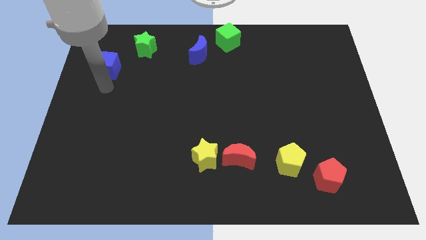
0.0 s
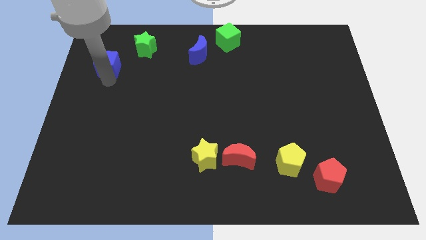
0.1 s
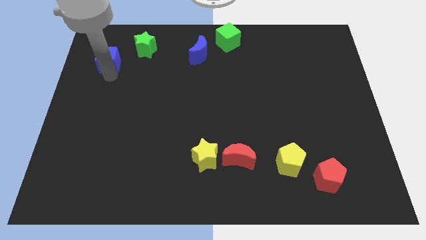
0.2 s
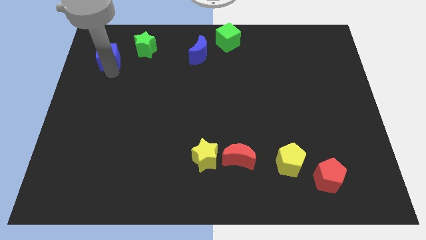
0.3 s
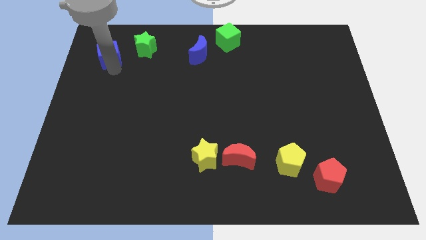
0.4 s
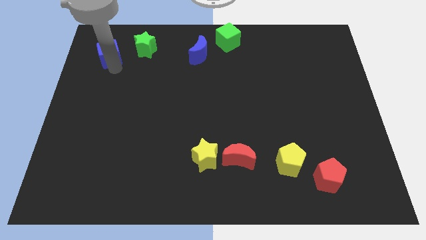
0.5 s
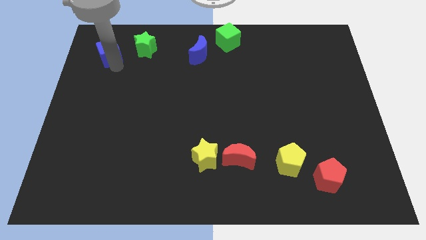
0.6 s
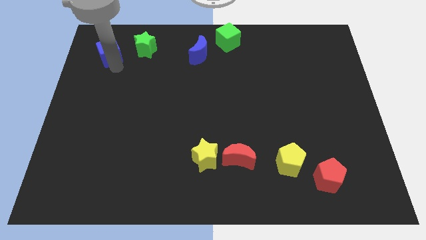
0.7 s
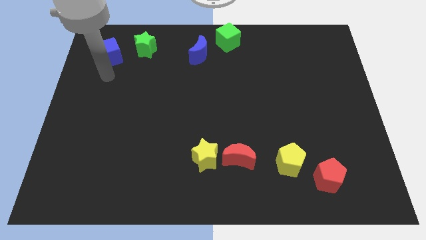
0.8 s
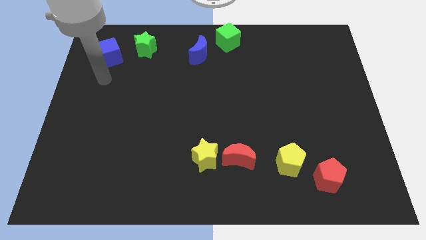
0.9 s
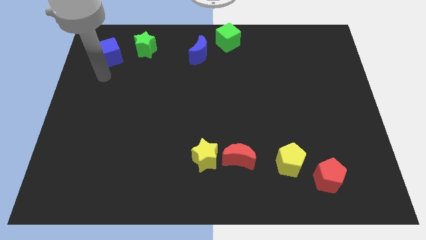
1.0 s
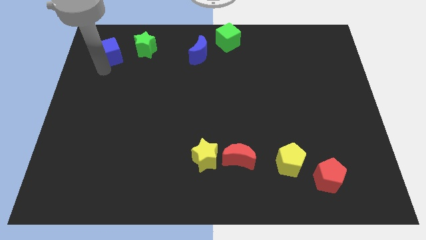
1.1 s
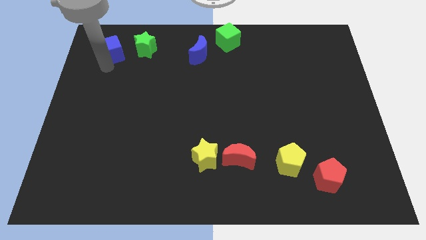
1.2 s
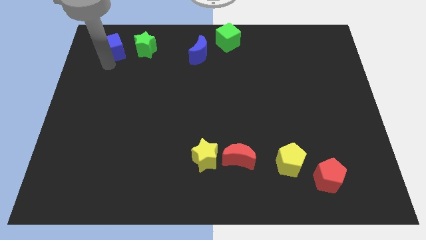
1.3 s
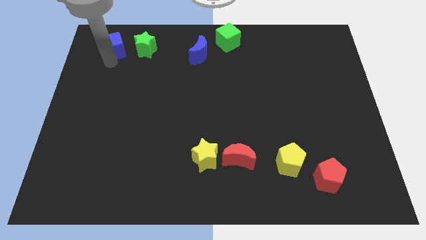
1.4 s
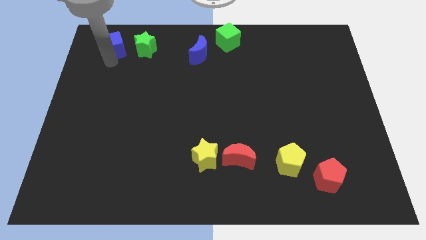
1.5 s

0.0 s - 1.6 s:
move the blue cube to the left side of the green star

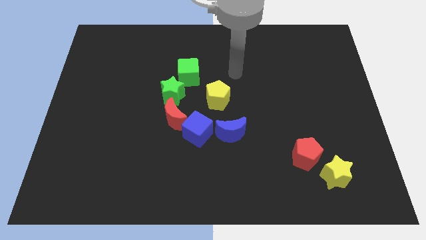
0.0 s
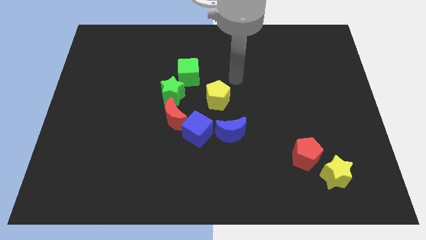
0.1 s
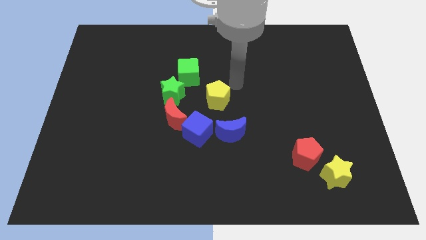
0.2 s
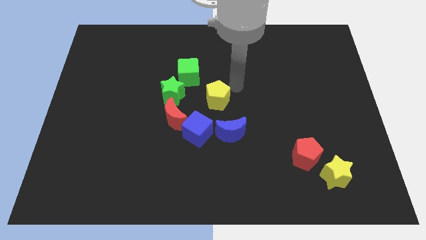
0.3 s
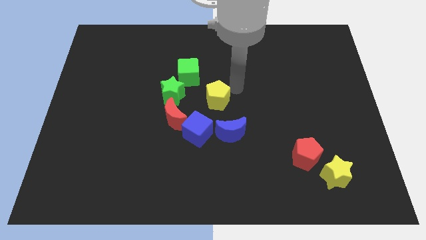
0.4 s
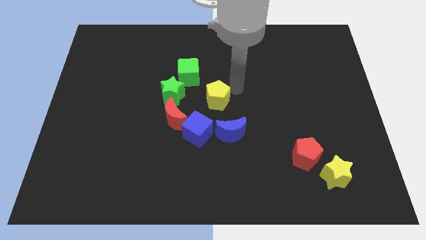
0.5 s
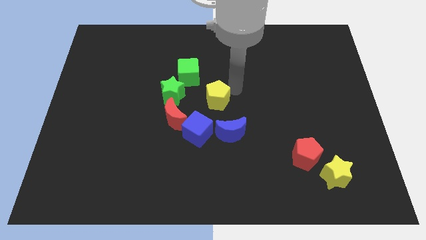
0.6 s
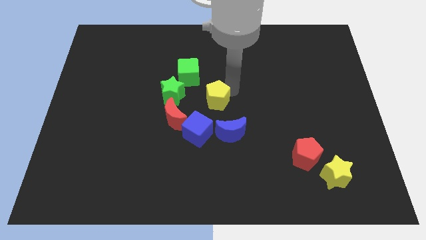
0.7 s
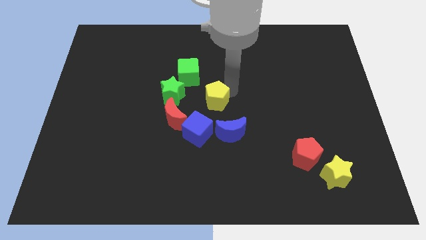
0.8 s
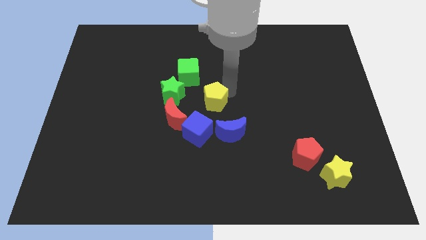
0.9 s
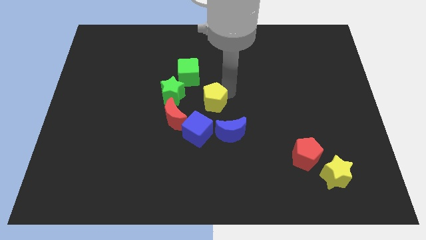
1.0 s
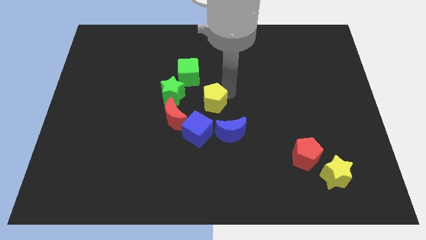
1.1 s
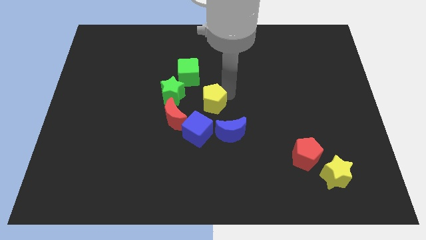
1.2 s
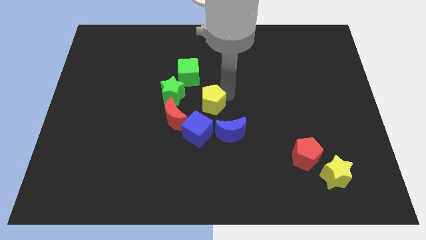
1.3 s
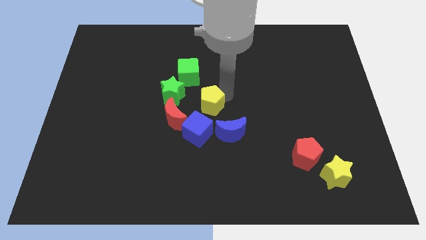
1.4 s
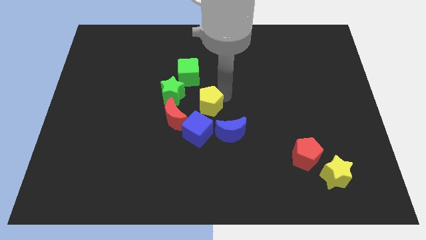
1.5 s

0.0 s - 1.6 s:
push the yellow pentagon to the center of the board

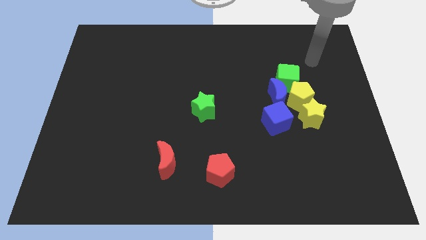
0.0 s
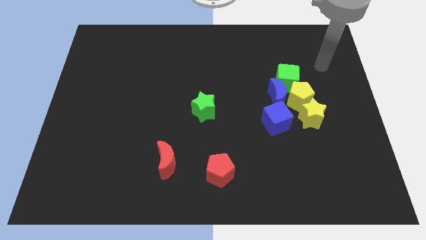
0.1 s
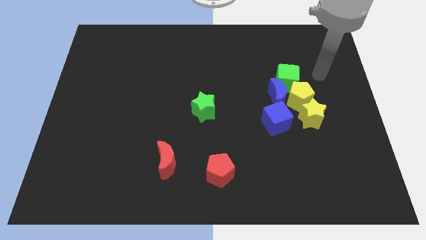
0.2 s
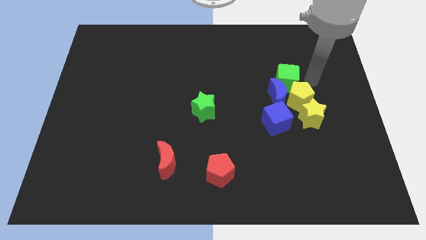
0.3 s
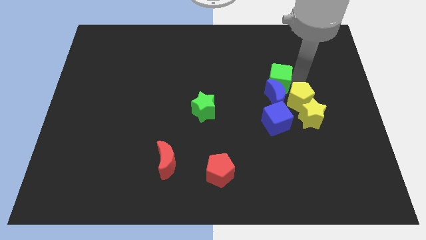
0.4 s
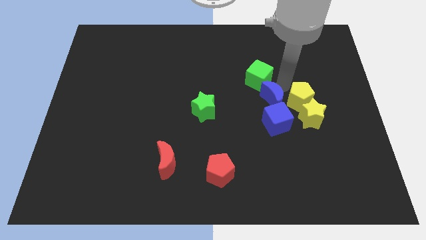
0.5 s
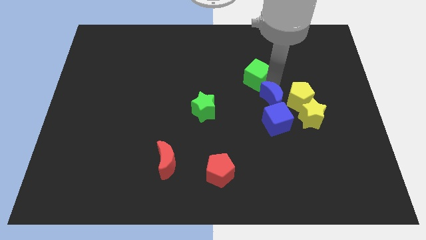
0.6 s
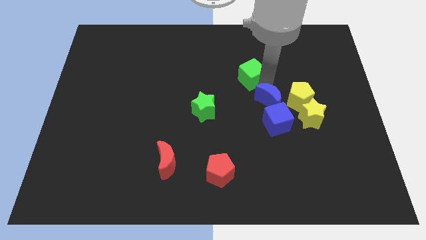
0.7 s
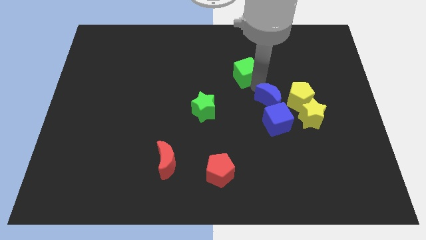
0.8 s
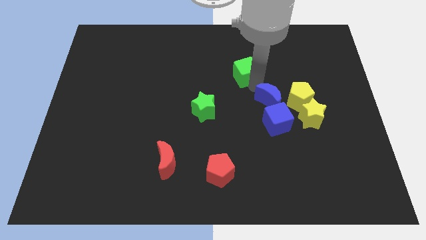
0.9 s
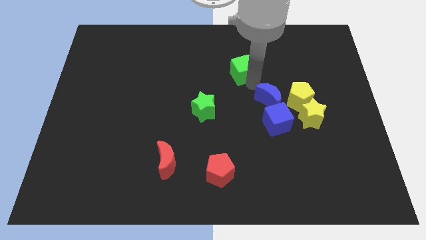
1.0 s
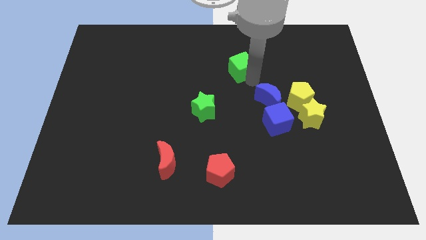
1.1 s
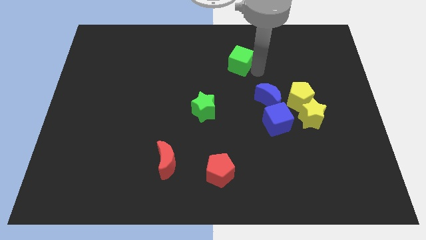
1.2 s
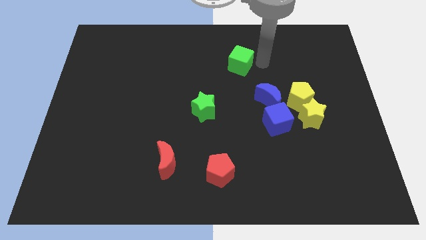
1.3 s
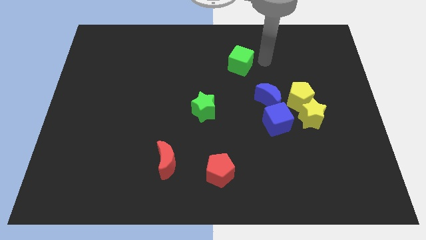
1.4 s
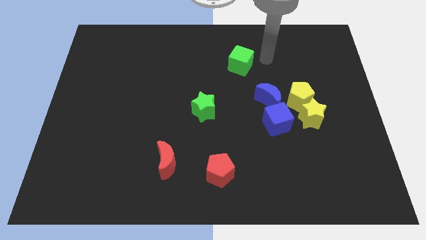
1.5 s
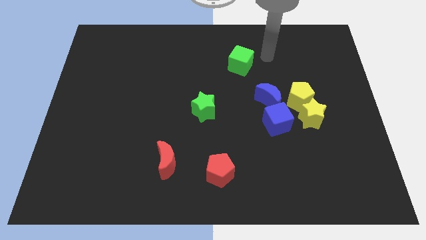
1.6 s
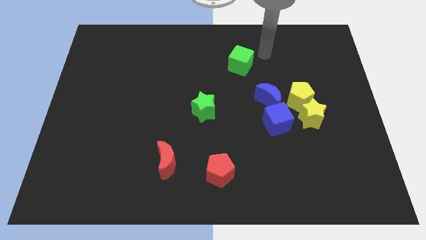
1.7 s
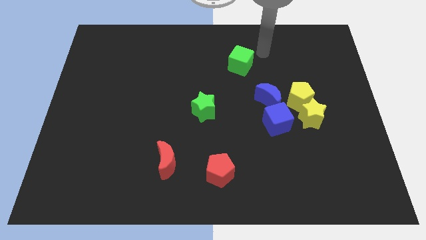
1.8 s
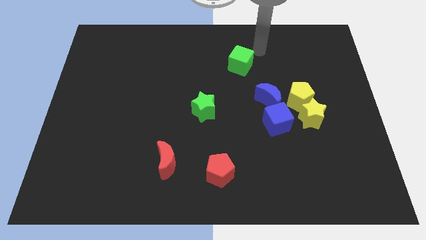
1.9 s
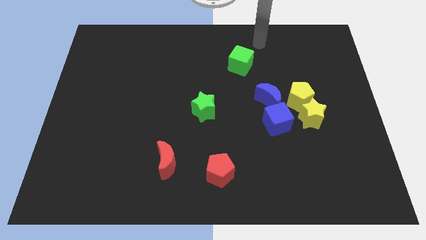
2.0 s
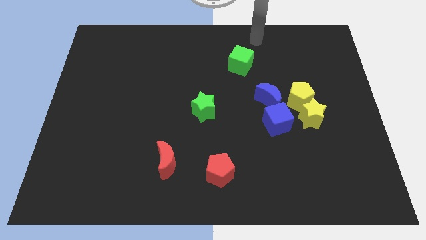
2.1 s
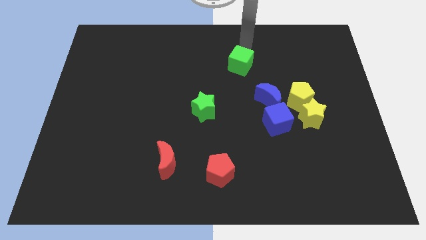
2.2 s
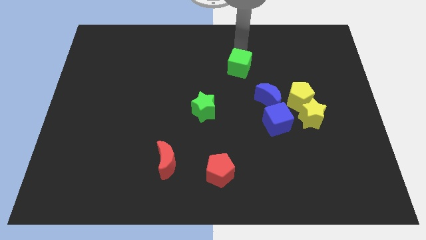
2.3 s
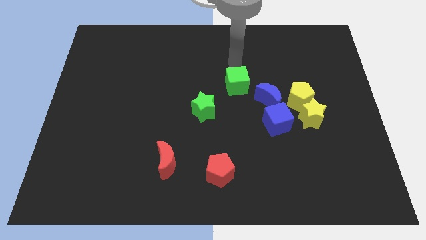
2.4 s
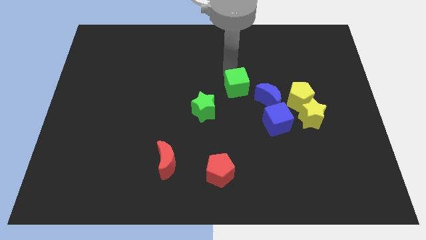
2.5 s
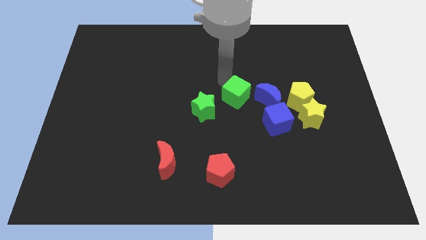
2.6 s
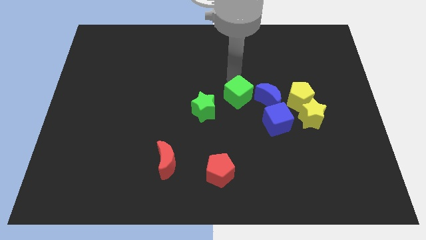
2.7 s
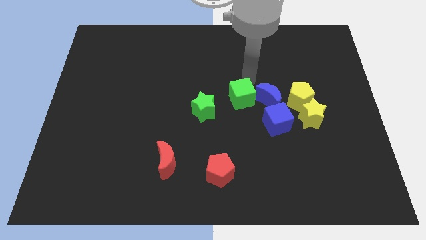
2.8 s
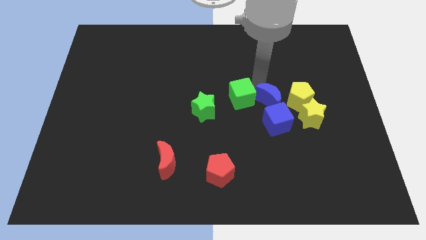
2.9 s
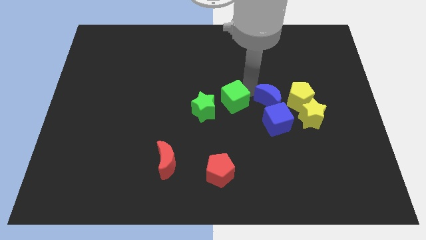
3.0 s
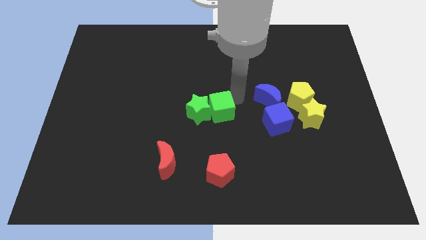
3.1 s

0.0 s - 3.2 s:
place the green cube to the left of the green star

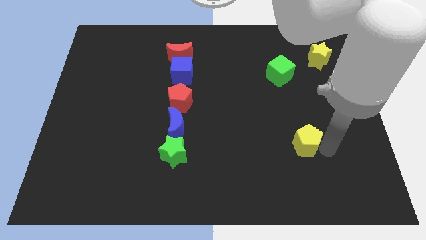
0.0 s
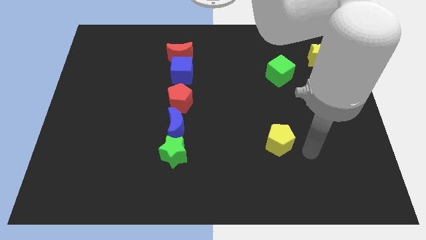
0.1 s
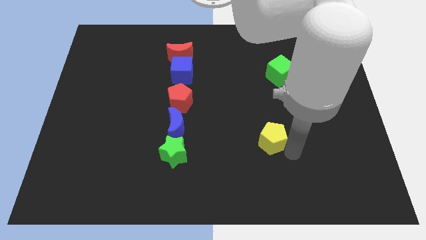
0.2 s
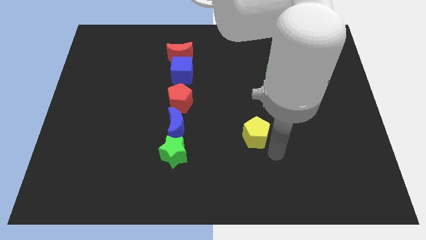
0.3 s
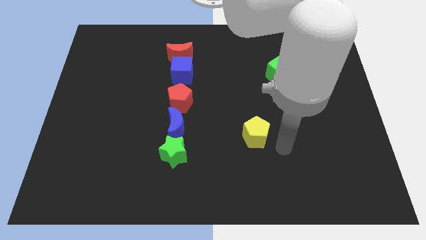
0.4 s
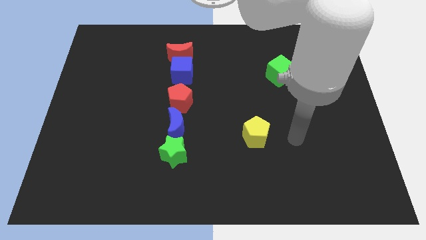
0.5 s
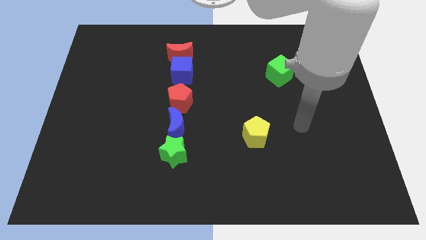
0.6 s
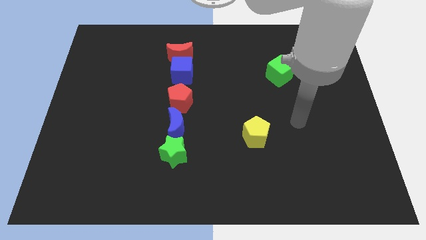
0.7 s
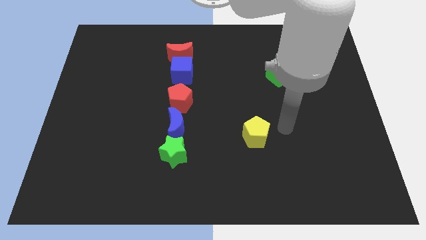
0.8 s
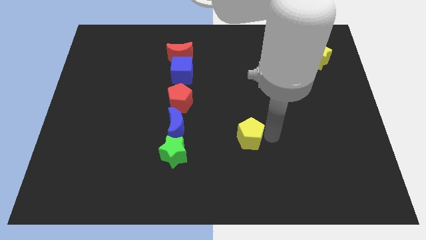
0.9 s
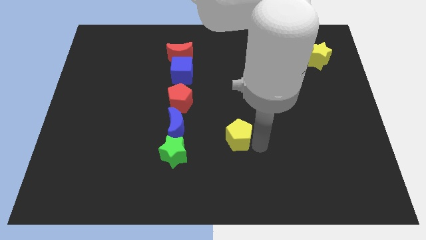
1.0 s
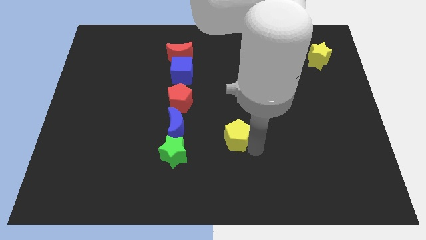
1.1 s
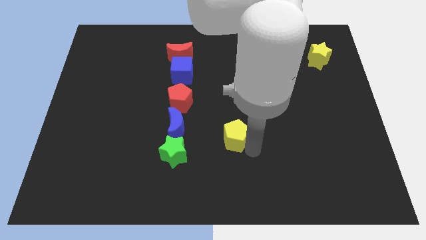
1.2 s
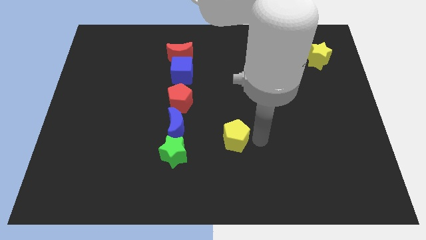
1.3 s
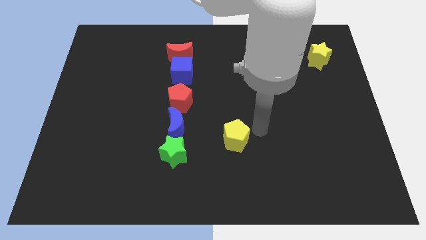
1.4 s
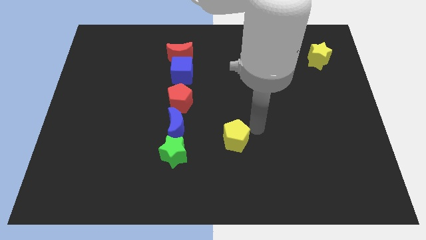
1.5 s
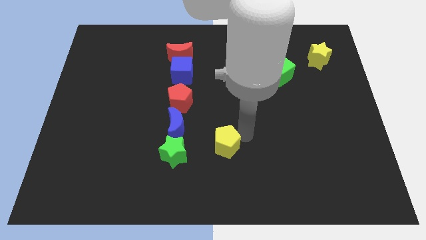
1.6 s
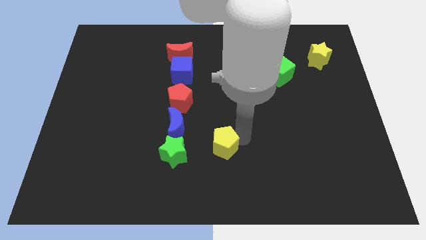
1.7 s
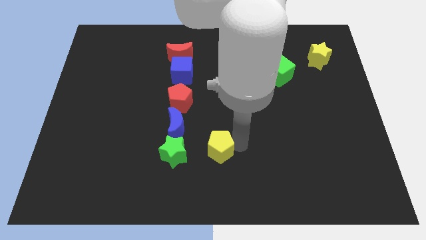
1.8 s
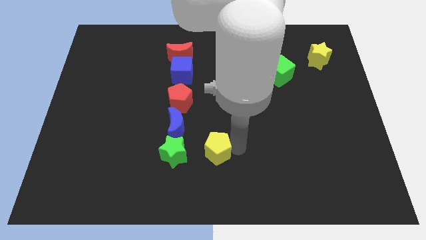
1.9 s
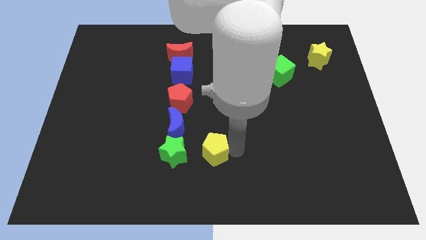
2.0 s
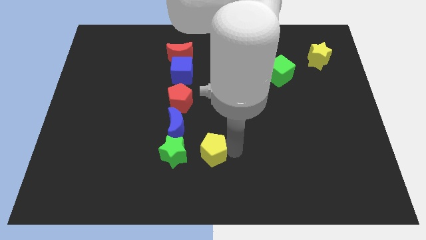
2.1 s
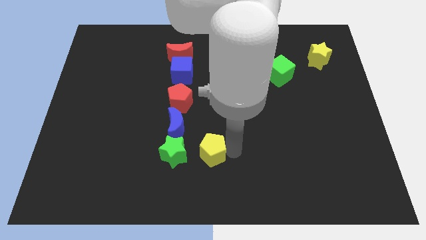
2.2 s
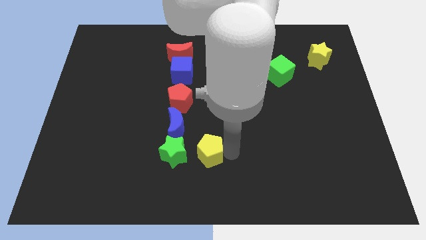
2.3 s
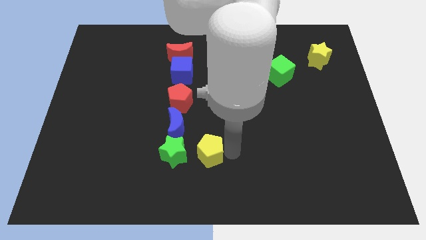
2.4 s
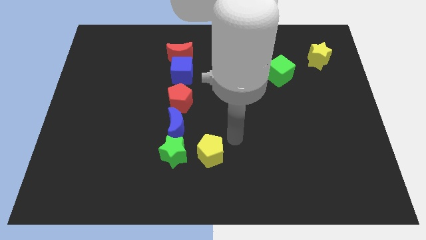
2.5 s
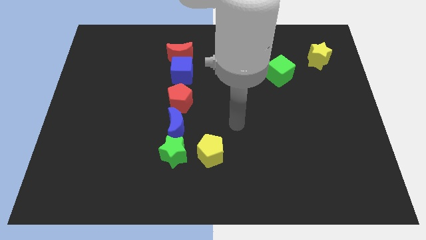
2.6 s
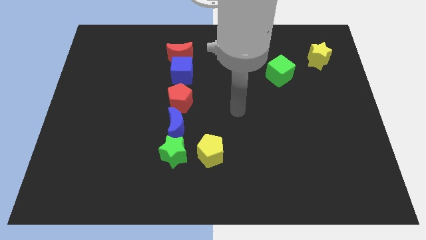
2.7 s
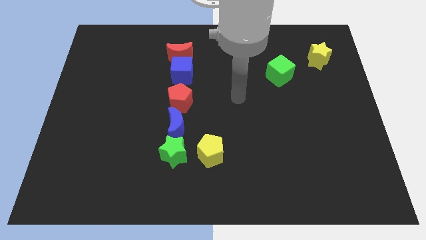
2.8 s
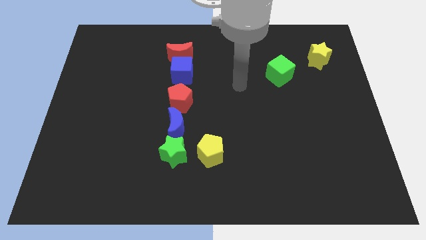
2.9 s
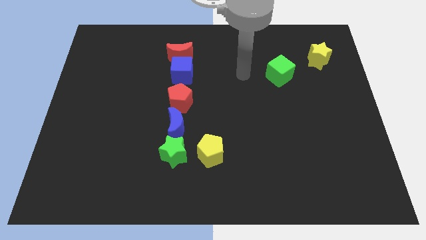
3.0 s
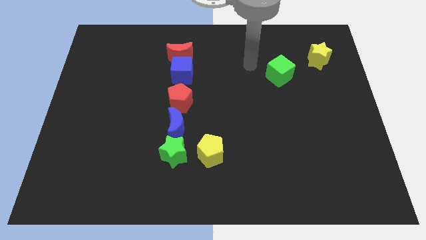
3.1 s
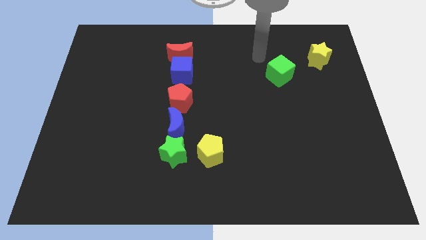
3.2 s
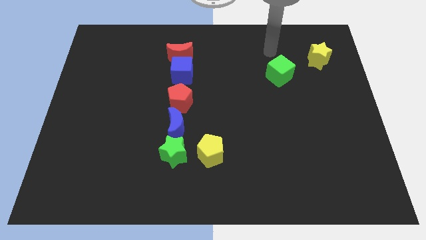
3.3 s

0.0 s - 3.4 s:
push the yellow pentagon to the right of the green star
